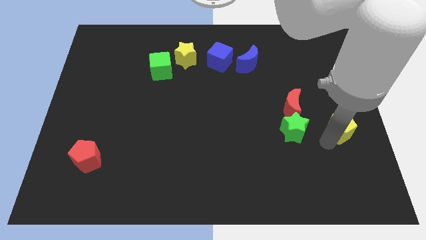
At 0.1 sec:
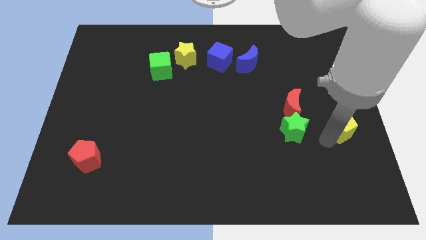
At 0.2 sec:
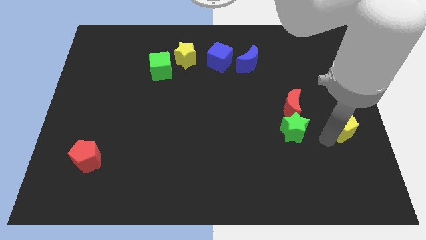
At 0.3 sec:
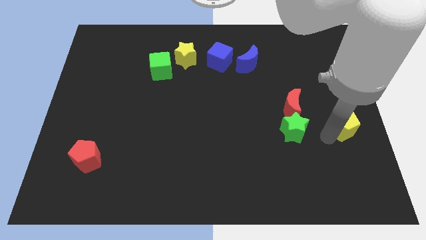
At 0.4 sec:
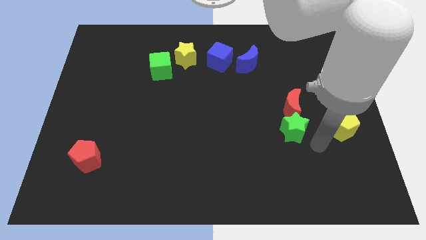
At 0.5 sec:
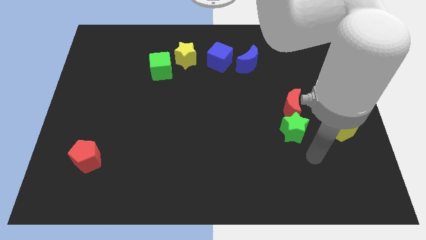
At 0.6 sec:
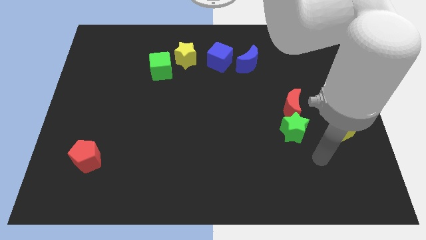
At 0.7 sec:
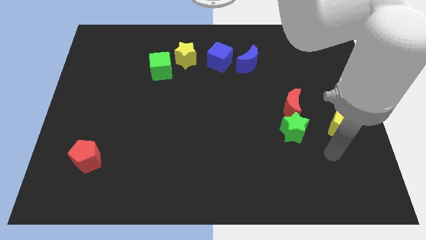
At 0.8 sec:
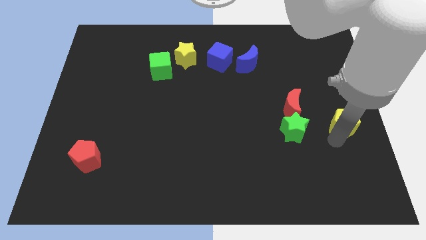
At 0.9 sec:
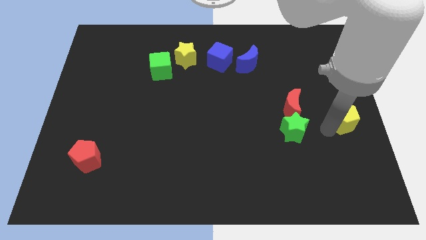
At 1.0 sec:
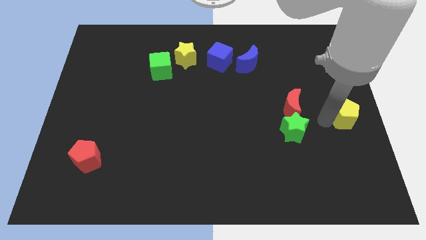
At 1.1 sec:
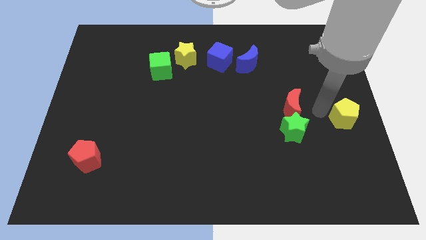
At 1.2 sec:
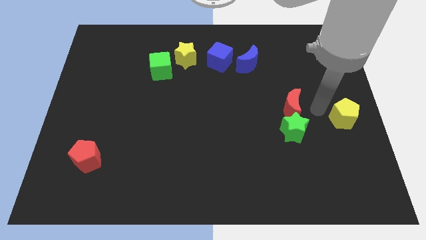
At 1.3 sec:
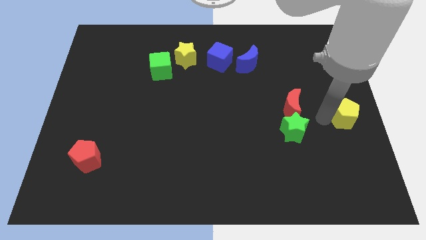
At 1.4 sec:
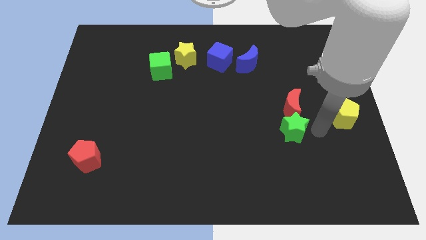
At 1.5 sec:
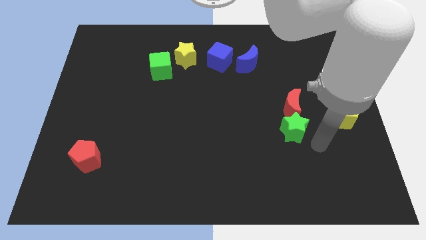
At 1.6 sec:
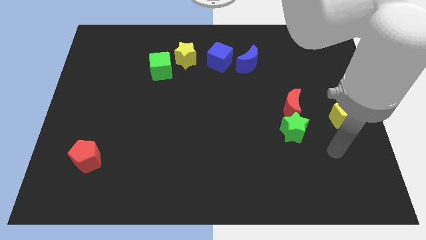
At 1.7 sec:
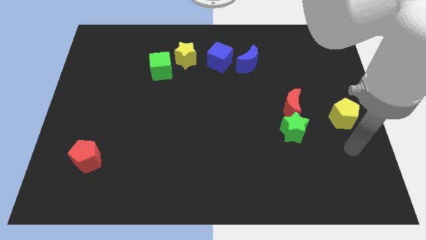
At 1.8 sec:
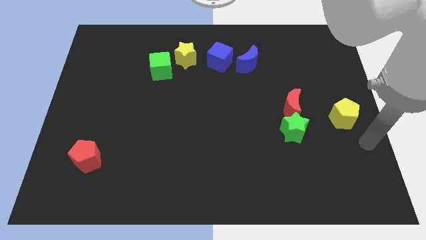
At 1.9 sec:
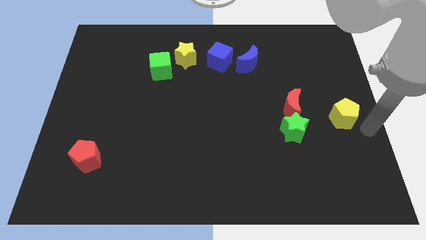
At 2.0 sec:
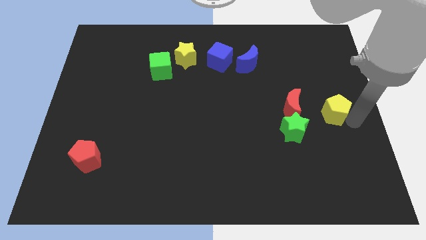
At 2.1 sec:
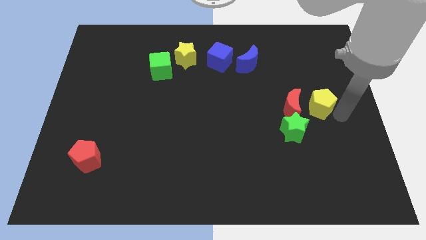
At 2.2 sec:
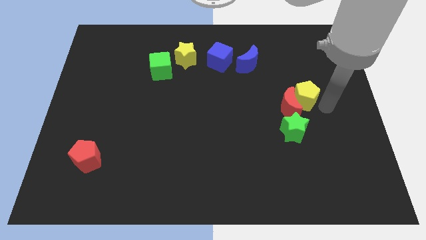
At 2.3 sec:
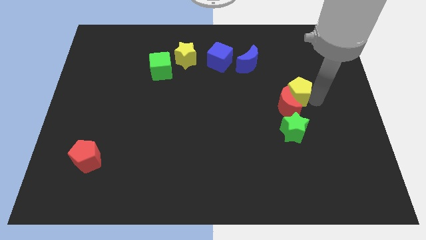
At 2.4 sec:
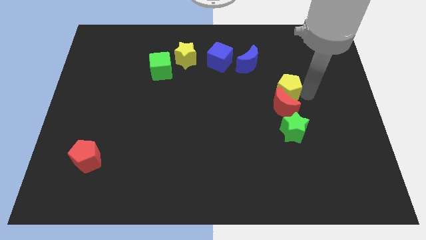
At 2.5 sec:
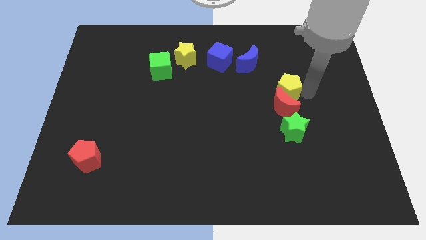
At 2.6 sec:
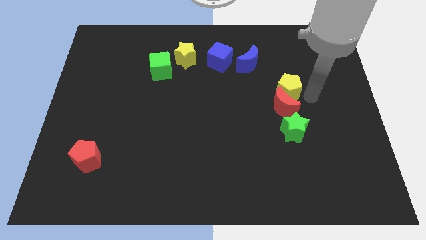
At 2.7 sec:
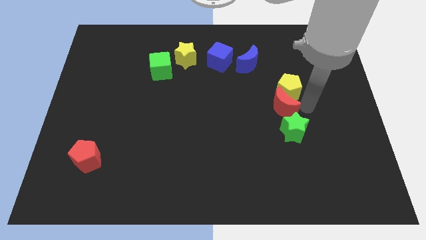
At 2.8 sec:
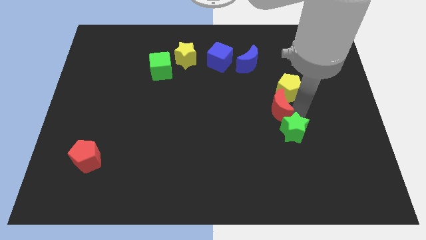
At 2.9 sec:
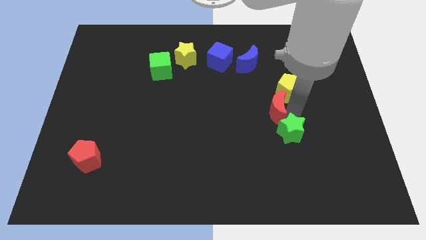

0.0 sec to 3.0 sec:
push the yellow pentagon into the red moon

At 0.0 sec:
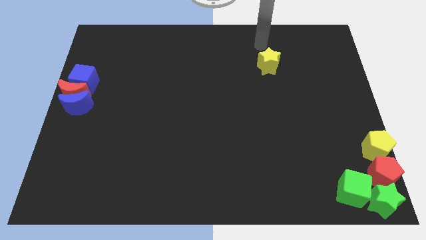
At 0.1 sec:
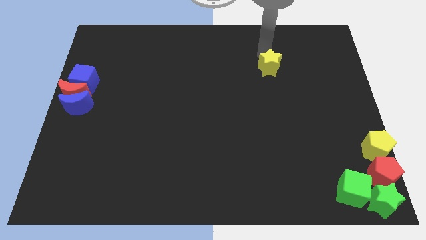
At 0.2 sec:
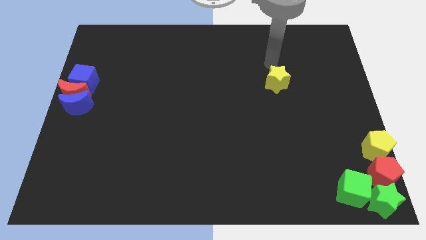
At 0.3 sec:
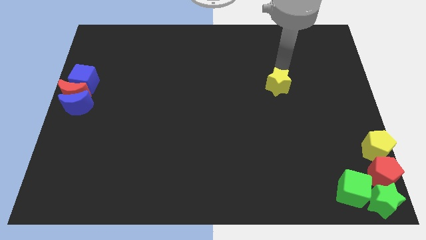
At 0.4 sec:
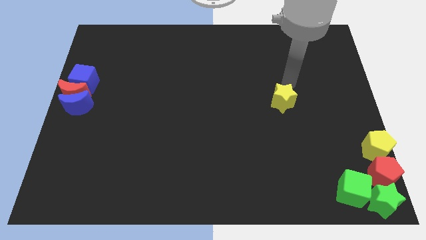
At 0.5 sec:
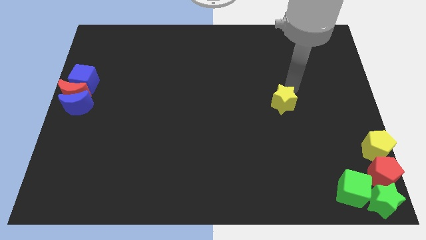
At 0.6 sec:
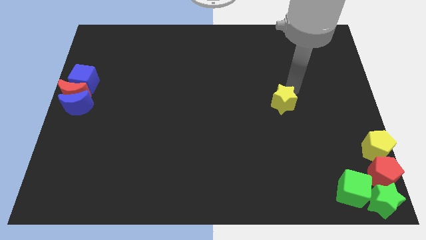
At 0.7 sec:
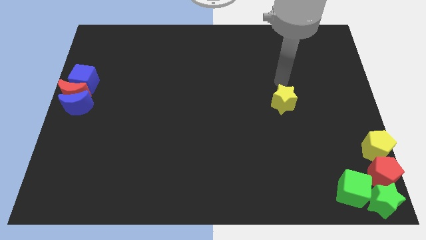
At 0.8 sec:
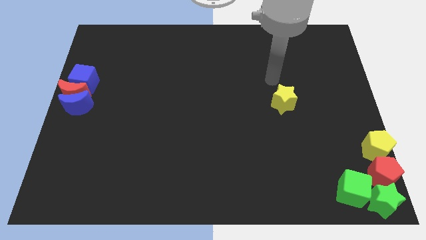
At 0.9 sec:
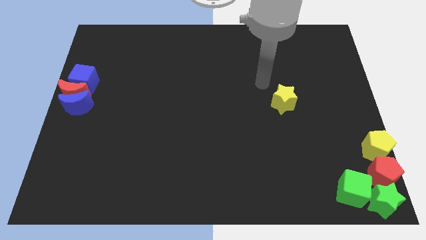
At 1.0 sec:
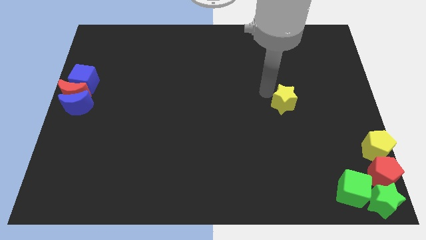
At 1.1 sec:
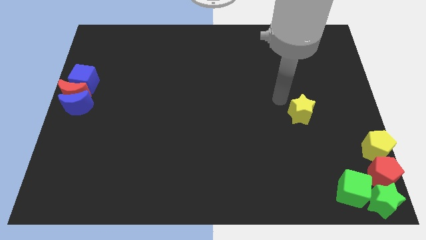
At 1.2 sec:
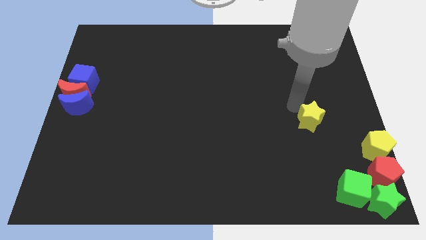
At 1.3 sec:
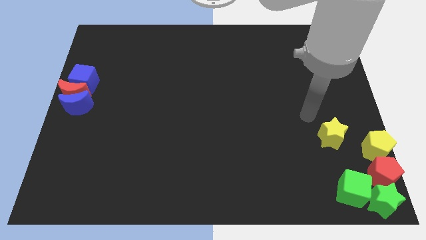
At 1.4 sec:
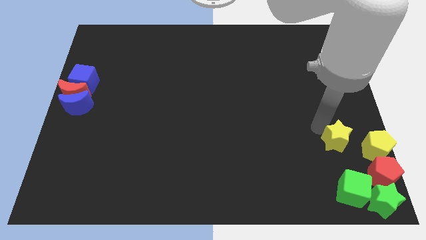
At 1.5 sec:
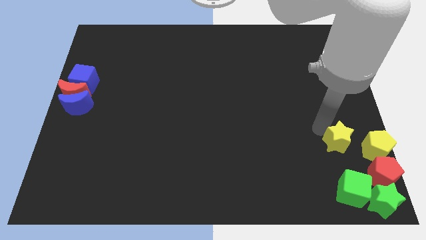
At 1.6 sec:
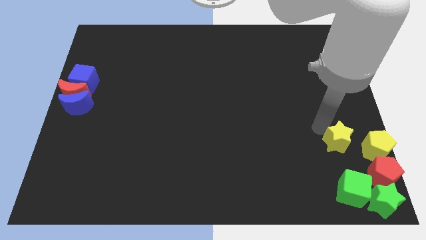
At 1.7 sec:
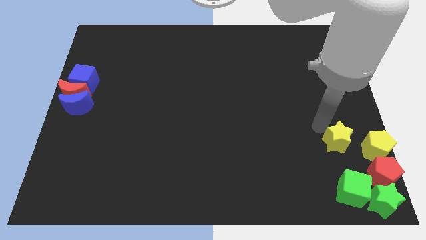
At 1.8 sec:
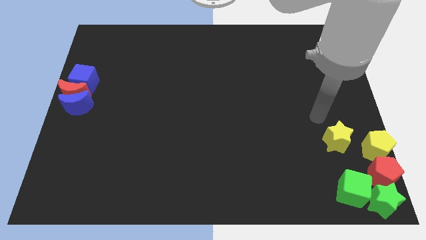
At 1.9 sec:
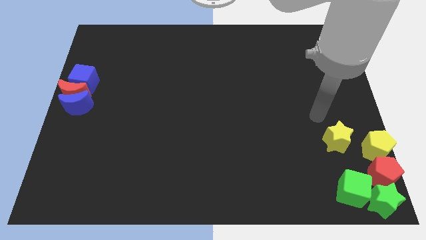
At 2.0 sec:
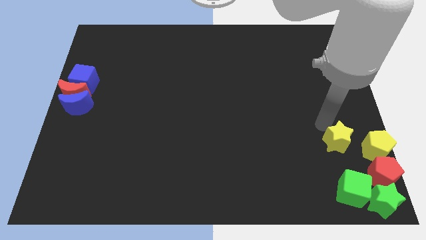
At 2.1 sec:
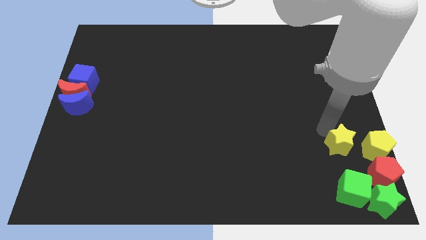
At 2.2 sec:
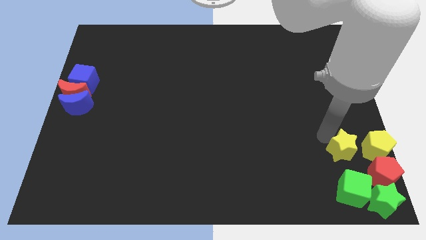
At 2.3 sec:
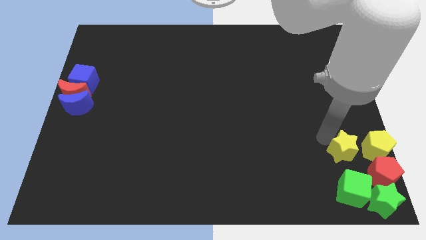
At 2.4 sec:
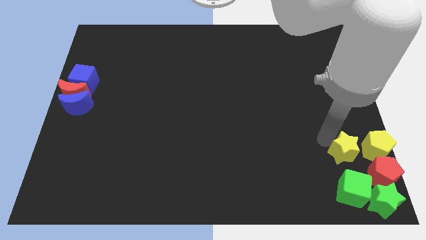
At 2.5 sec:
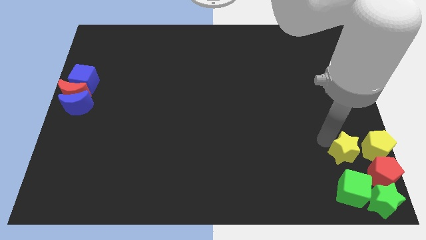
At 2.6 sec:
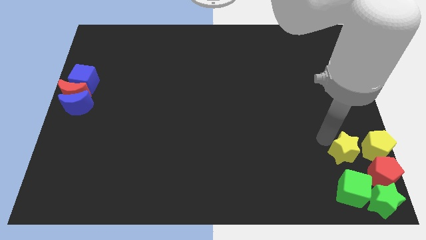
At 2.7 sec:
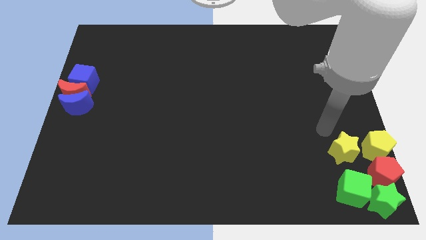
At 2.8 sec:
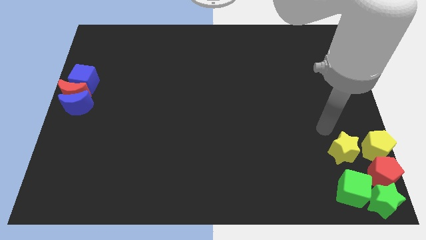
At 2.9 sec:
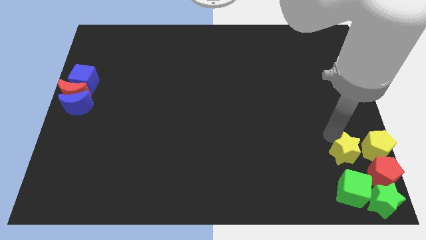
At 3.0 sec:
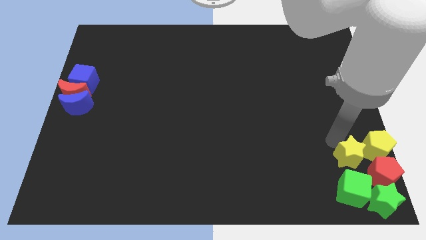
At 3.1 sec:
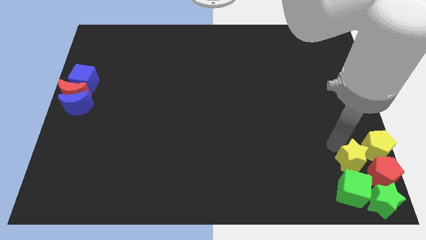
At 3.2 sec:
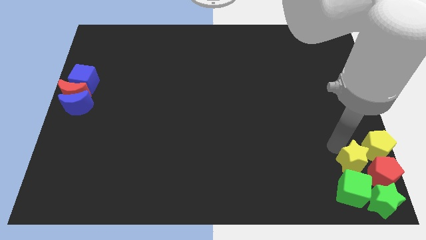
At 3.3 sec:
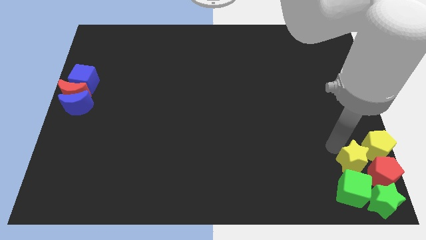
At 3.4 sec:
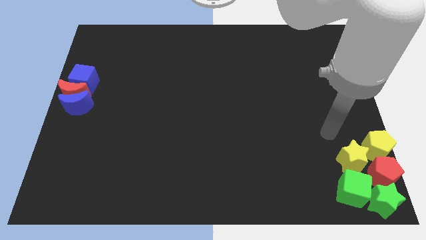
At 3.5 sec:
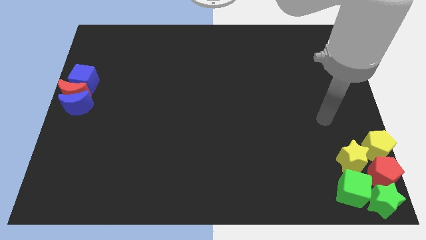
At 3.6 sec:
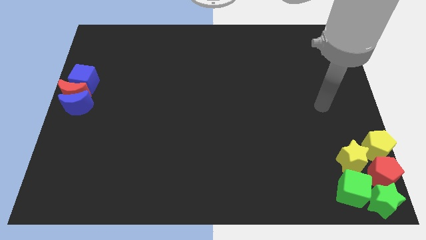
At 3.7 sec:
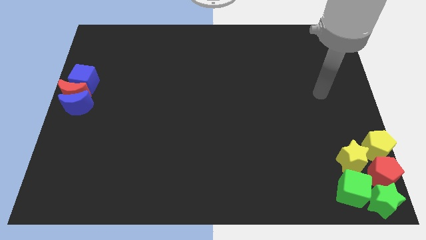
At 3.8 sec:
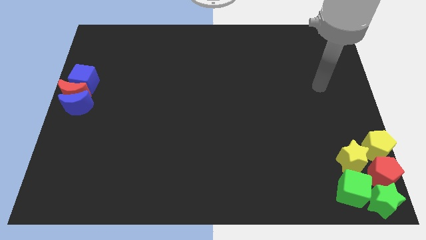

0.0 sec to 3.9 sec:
slide the yellow star towards the top of green cube

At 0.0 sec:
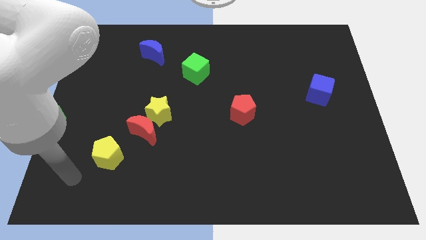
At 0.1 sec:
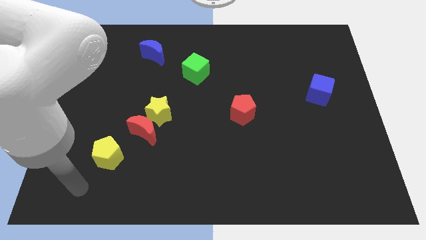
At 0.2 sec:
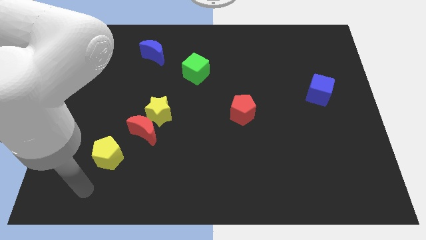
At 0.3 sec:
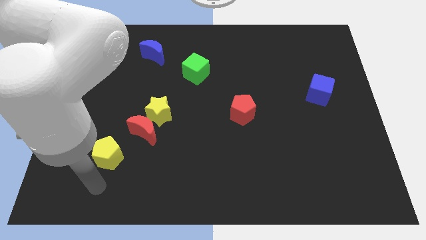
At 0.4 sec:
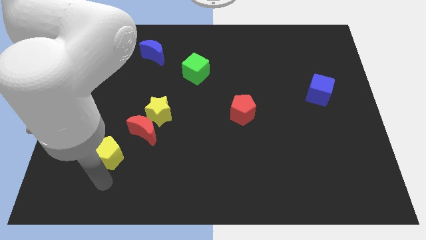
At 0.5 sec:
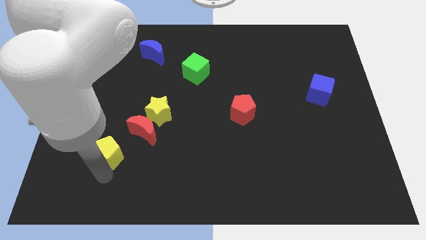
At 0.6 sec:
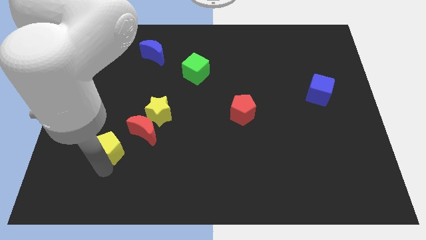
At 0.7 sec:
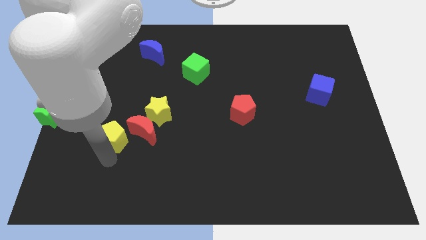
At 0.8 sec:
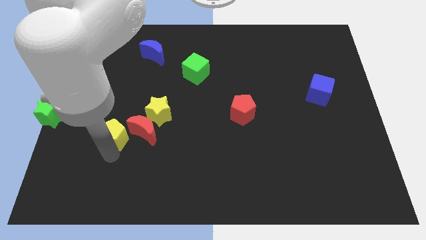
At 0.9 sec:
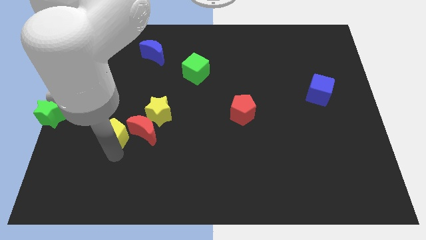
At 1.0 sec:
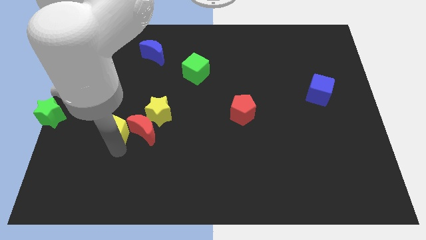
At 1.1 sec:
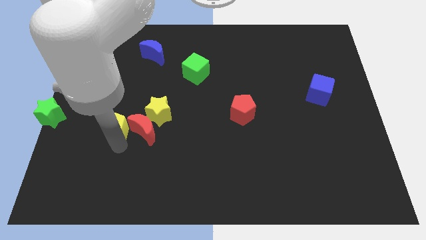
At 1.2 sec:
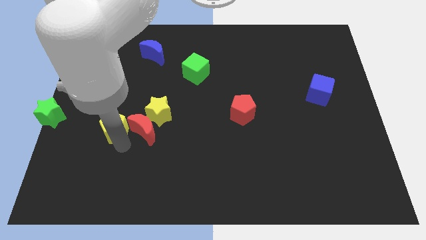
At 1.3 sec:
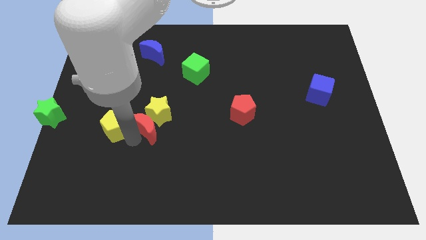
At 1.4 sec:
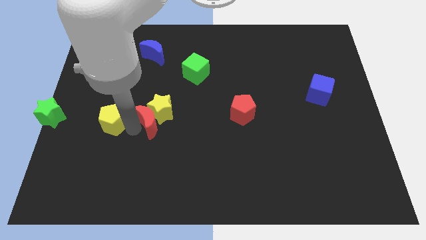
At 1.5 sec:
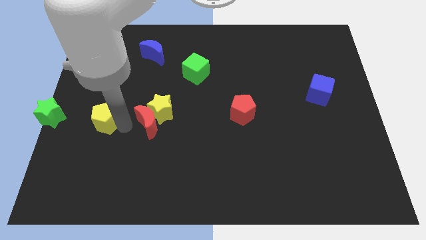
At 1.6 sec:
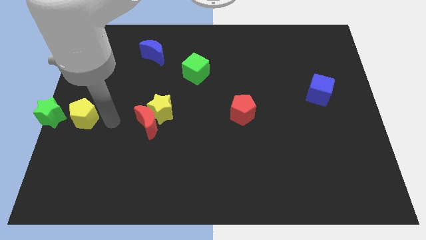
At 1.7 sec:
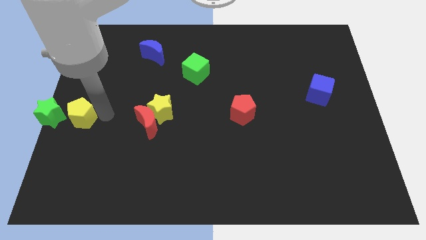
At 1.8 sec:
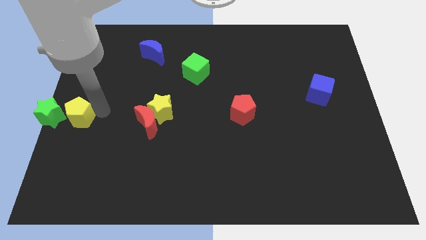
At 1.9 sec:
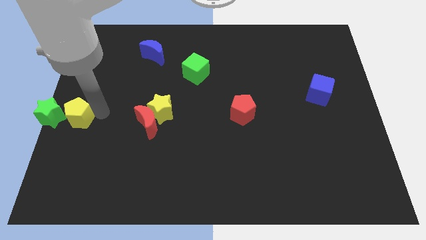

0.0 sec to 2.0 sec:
place the yellow pentagon right to the green star
